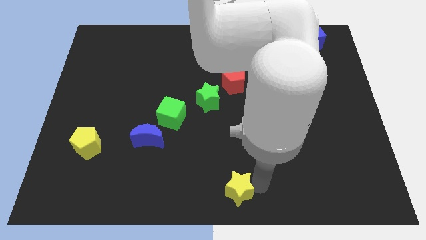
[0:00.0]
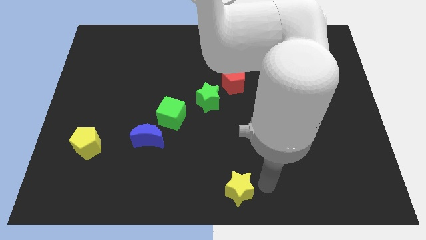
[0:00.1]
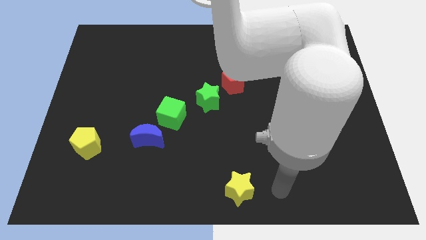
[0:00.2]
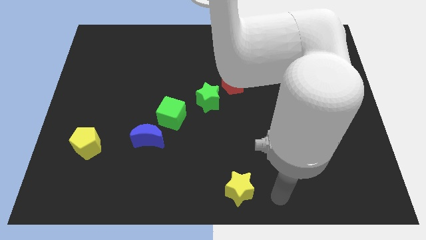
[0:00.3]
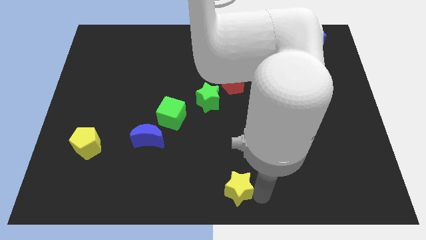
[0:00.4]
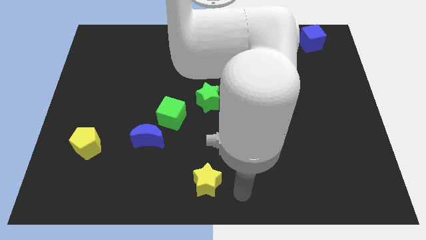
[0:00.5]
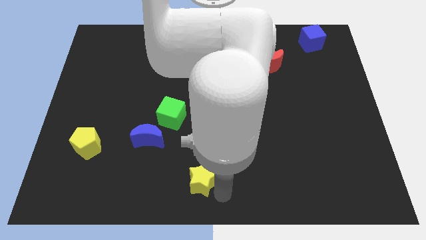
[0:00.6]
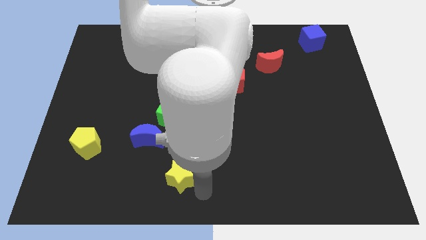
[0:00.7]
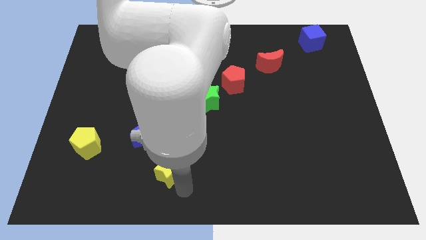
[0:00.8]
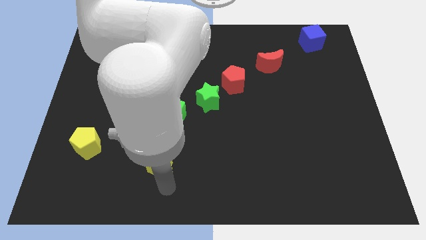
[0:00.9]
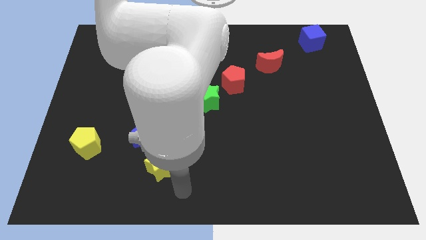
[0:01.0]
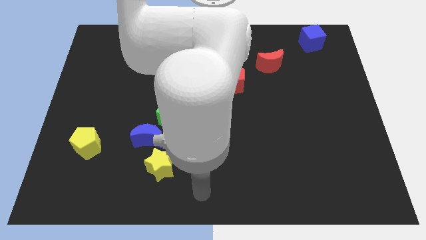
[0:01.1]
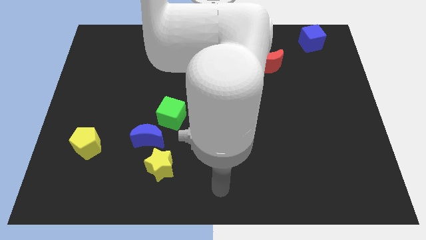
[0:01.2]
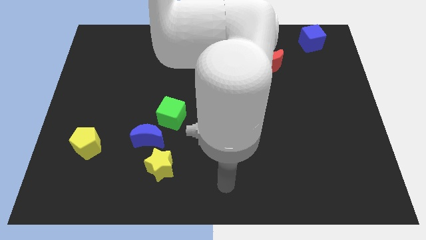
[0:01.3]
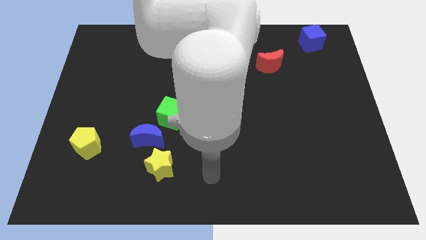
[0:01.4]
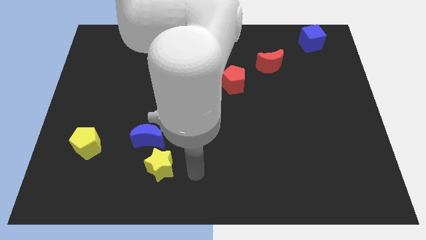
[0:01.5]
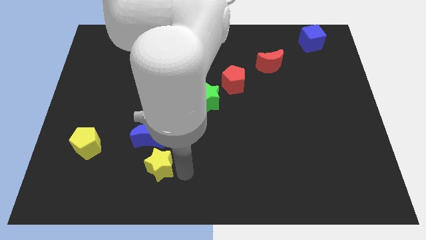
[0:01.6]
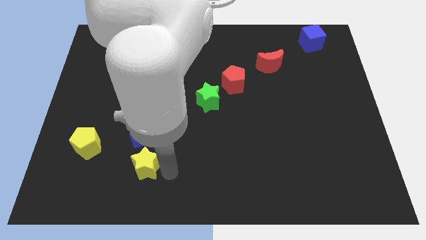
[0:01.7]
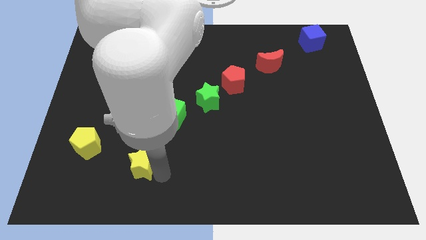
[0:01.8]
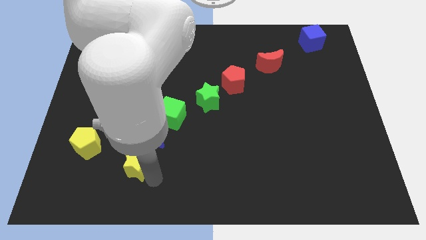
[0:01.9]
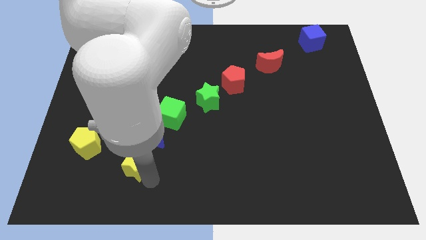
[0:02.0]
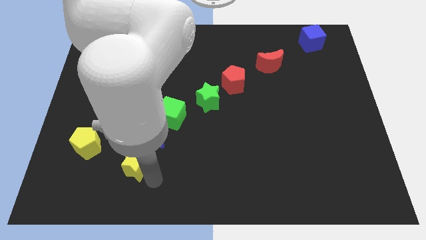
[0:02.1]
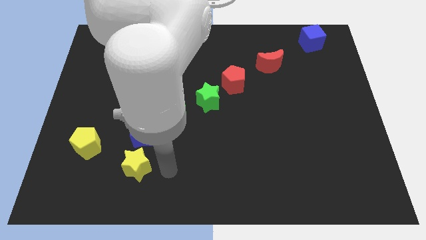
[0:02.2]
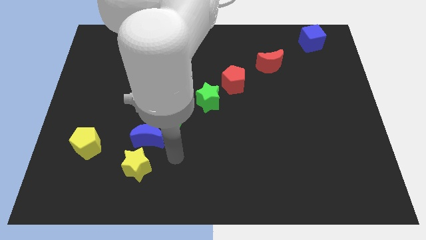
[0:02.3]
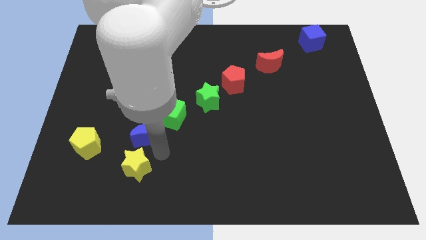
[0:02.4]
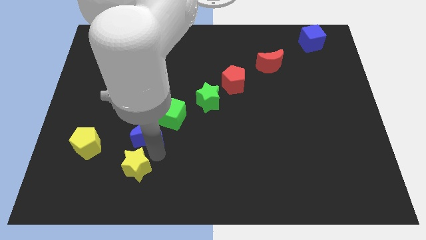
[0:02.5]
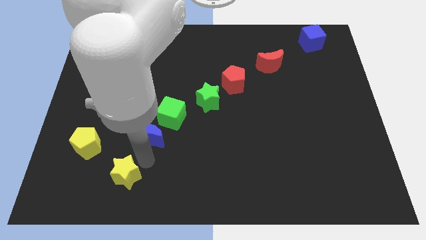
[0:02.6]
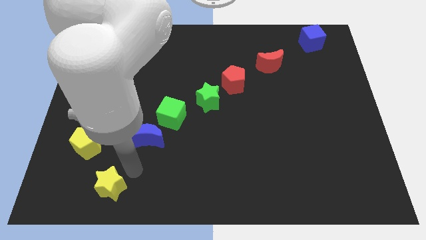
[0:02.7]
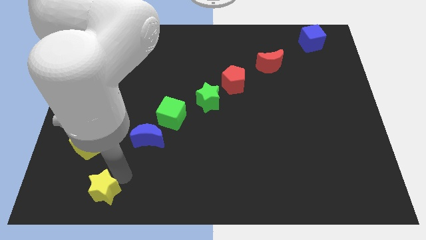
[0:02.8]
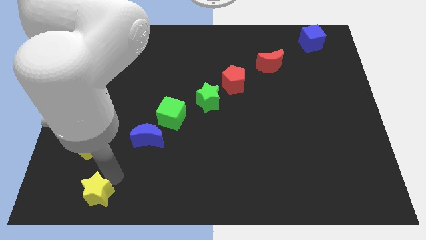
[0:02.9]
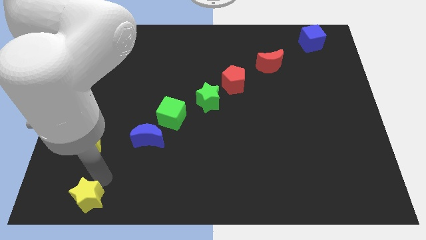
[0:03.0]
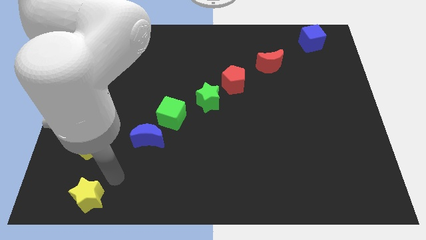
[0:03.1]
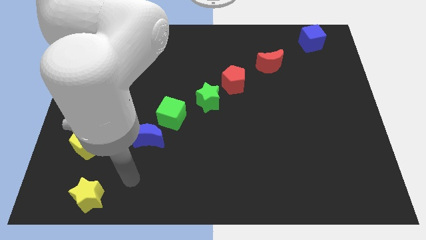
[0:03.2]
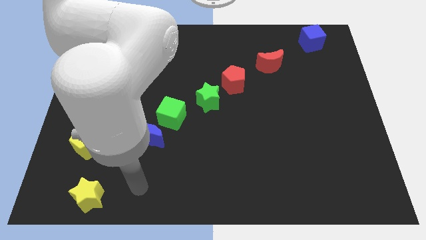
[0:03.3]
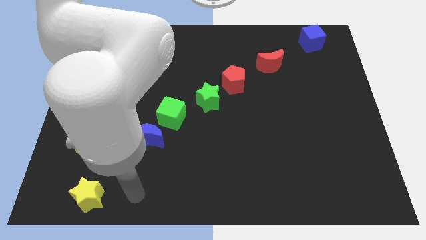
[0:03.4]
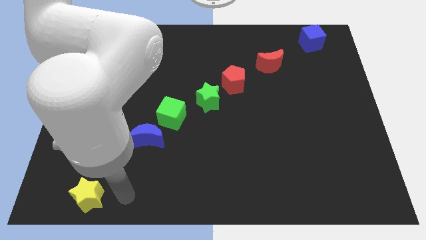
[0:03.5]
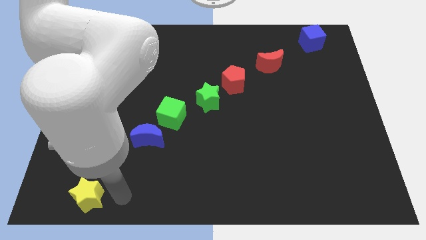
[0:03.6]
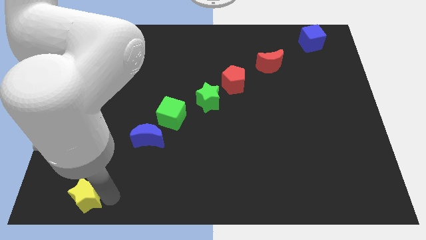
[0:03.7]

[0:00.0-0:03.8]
push the yellow star below the yellow pentagon

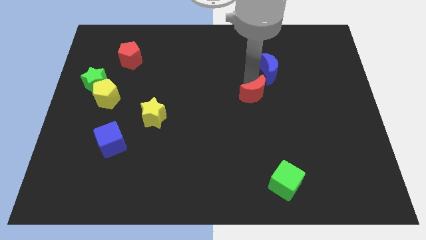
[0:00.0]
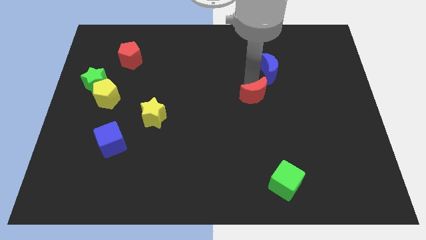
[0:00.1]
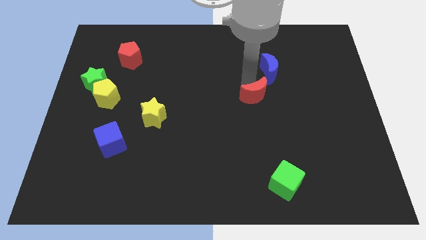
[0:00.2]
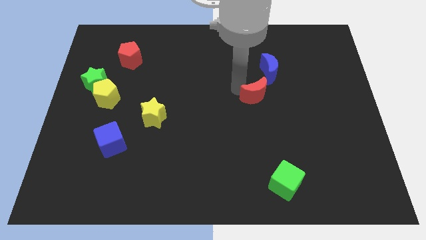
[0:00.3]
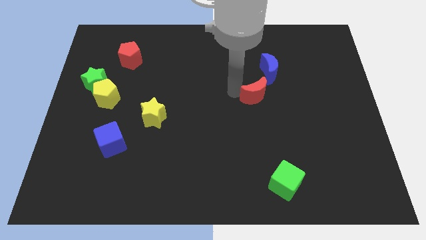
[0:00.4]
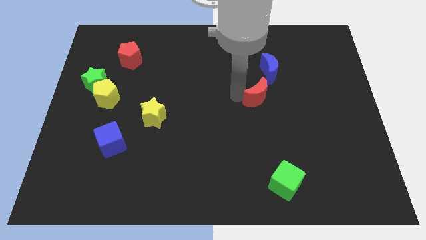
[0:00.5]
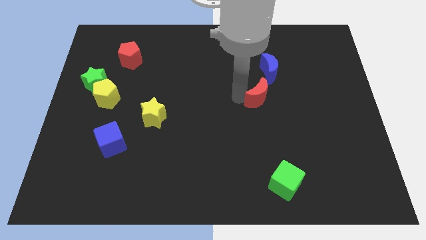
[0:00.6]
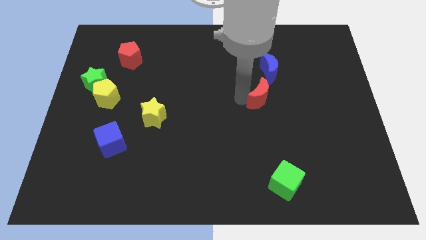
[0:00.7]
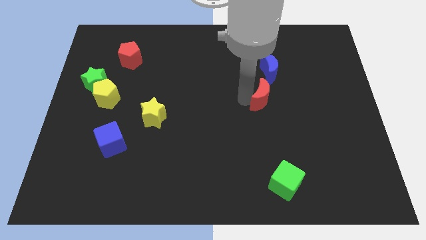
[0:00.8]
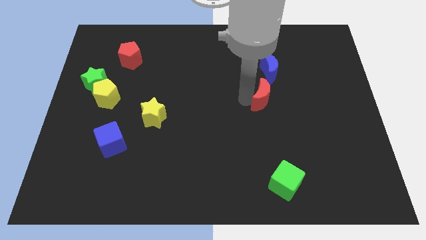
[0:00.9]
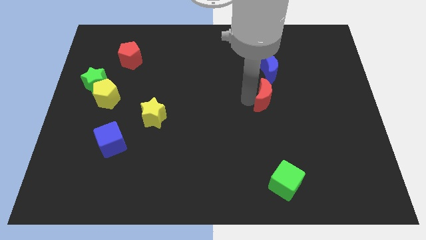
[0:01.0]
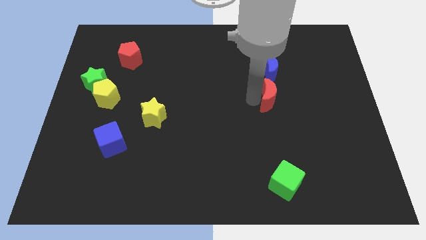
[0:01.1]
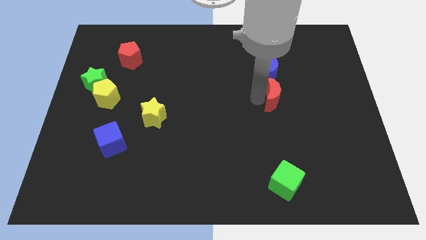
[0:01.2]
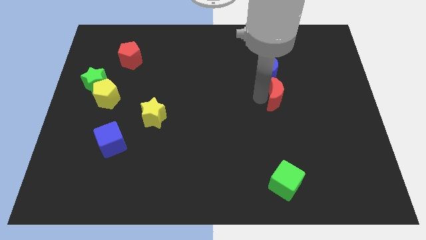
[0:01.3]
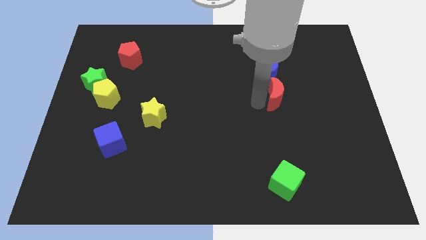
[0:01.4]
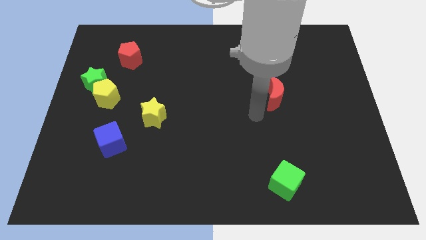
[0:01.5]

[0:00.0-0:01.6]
place the red crescent underneath the blue crescent

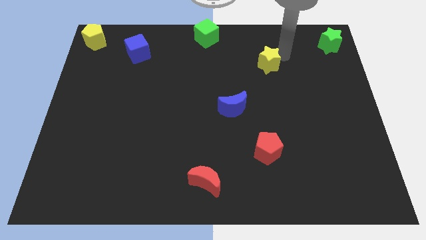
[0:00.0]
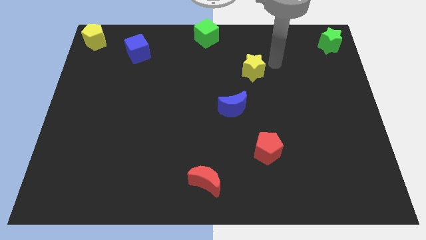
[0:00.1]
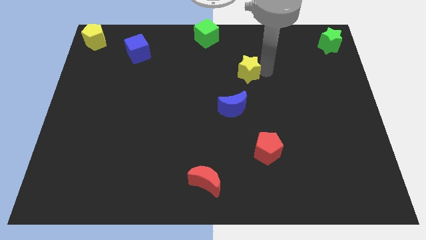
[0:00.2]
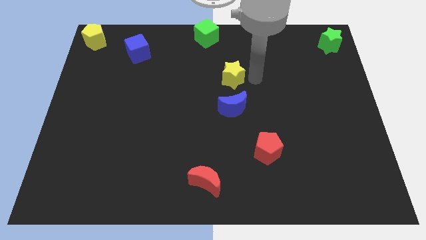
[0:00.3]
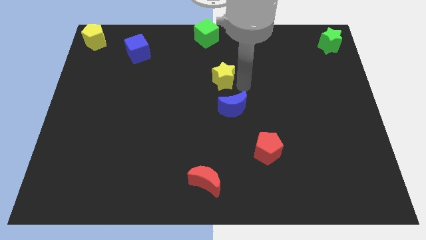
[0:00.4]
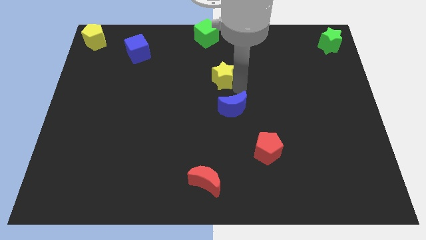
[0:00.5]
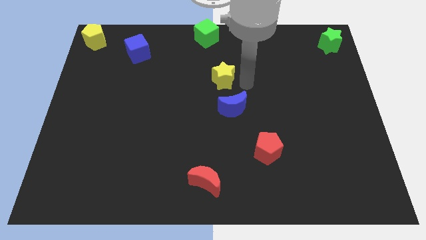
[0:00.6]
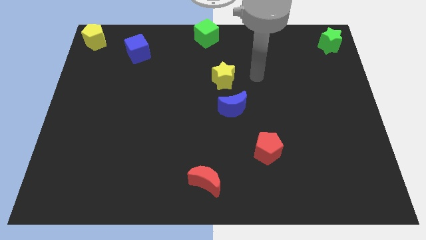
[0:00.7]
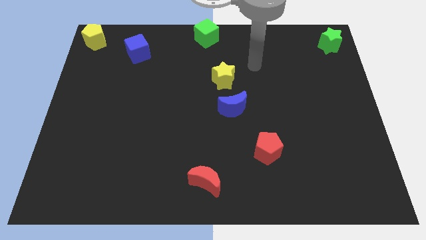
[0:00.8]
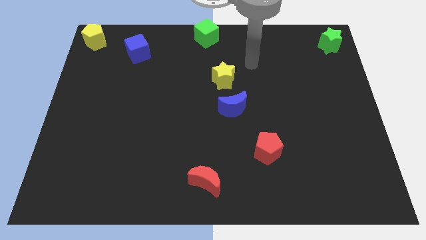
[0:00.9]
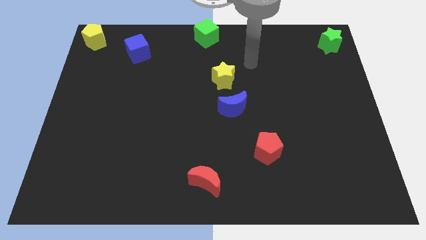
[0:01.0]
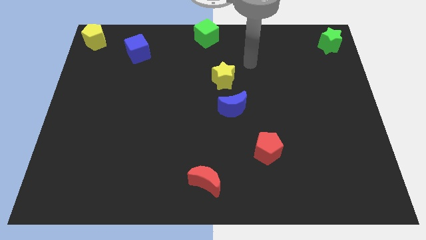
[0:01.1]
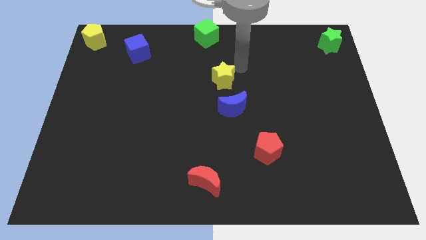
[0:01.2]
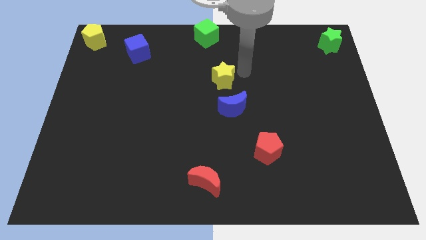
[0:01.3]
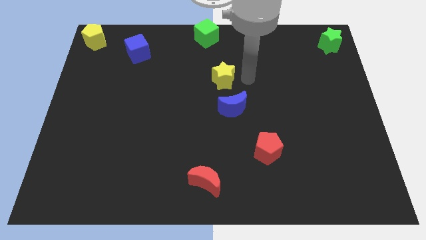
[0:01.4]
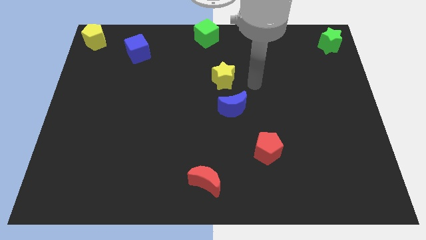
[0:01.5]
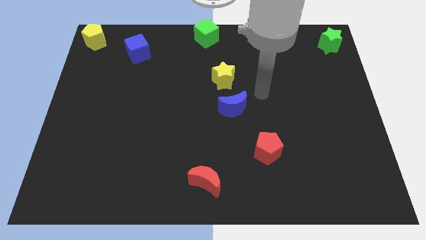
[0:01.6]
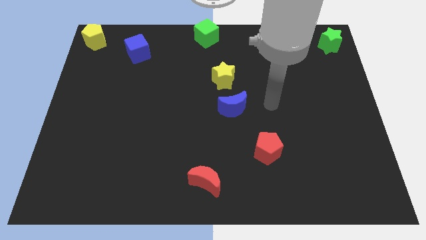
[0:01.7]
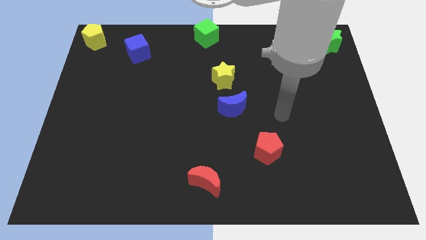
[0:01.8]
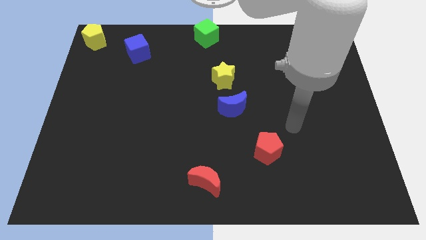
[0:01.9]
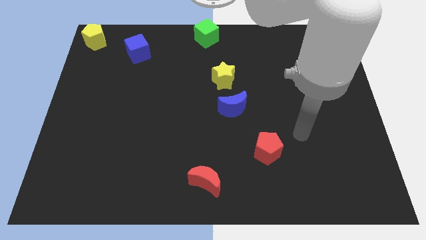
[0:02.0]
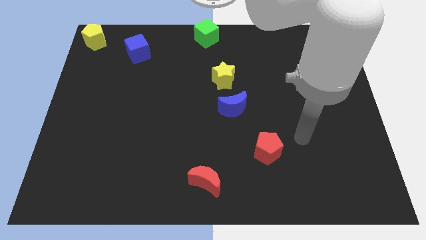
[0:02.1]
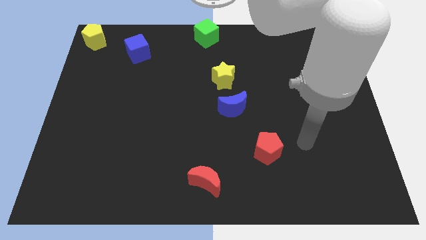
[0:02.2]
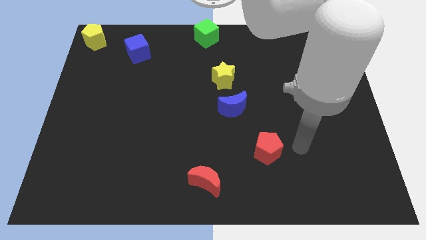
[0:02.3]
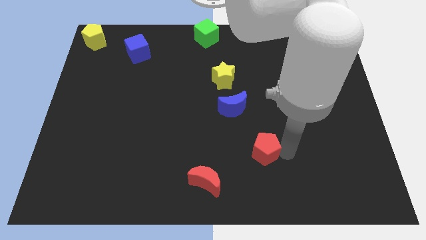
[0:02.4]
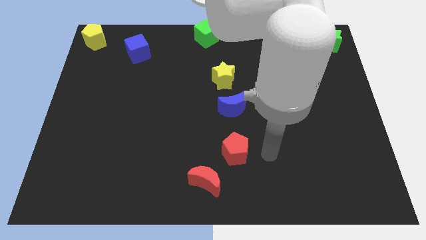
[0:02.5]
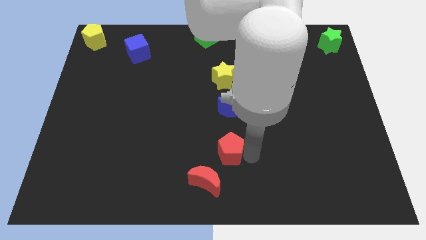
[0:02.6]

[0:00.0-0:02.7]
place the yellow star above the blue moon

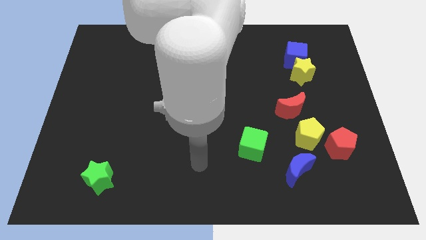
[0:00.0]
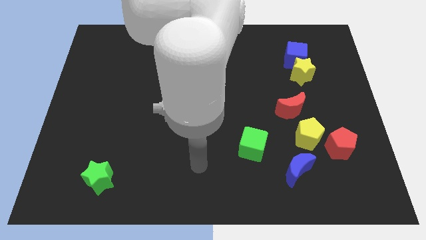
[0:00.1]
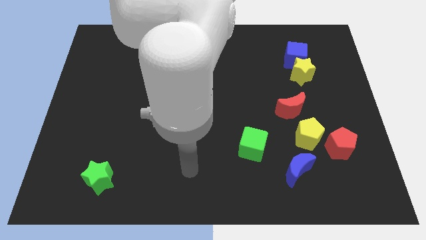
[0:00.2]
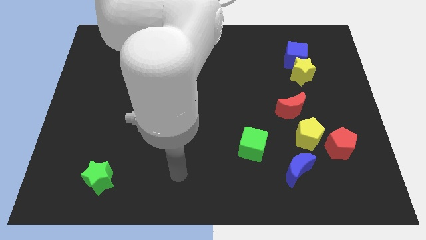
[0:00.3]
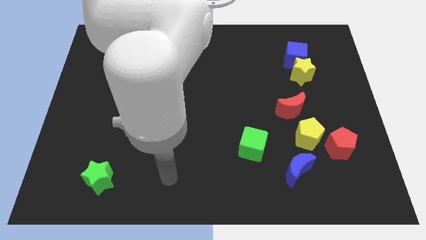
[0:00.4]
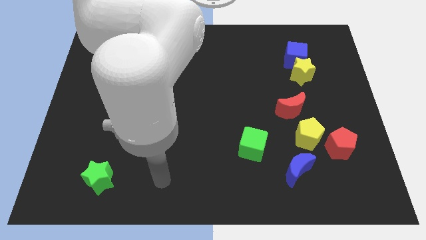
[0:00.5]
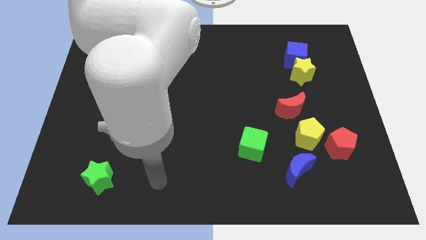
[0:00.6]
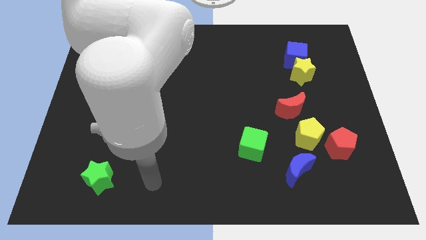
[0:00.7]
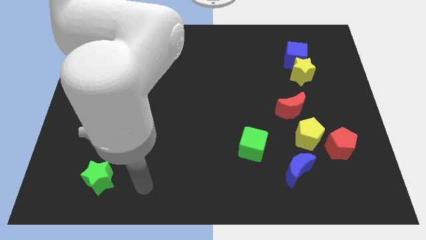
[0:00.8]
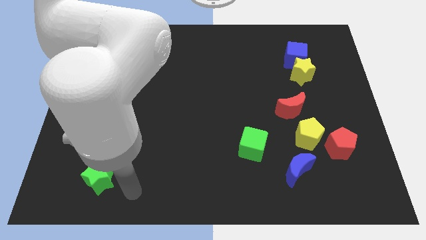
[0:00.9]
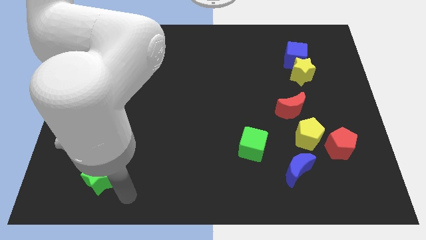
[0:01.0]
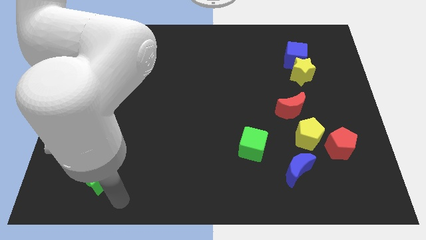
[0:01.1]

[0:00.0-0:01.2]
move your arm towards the green star
